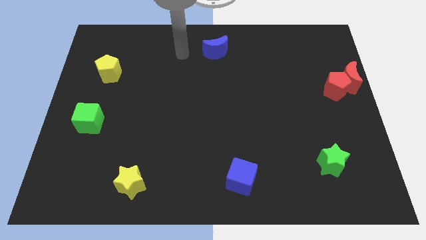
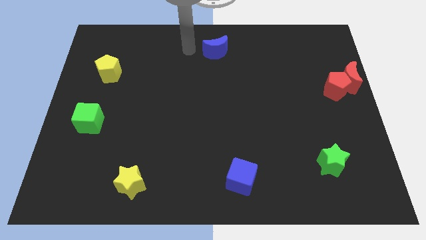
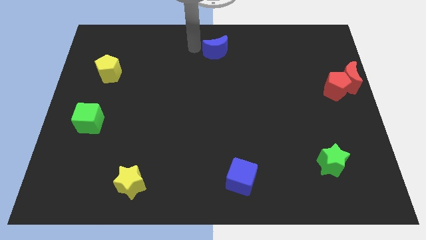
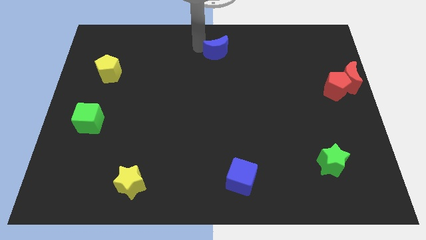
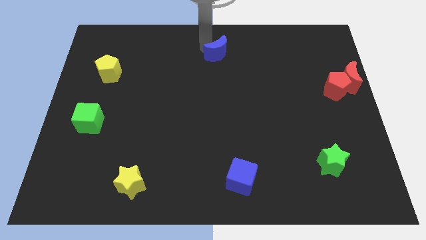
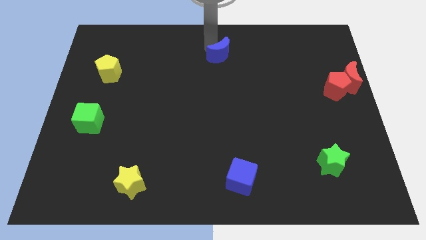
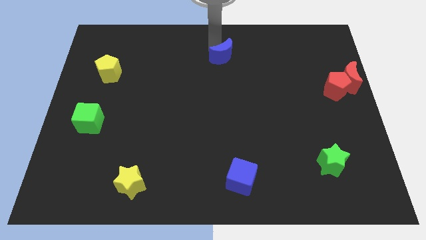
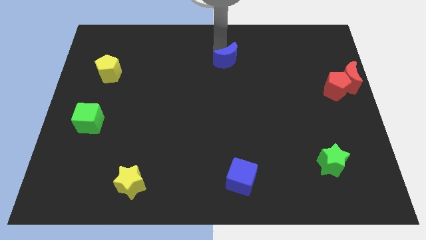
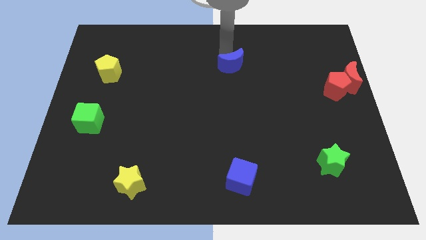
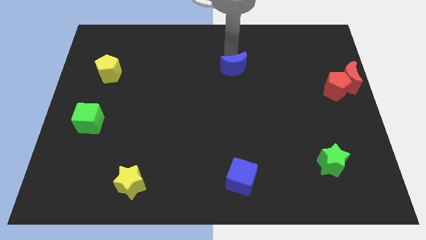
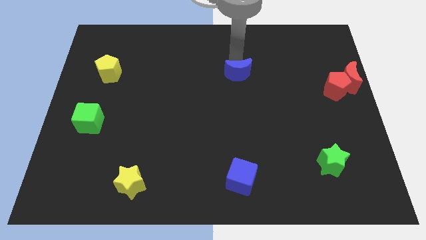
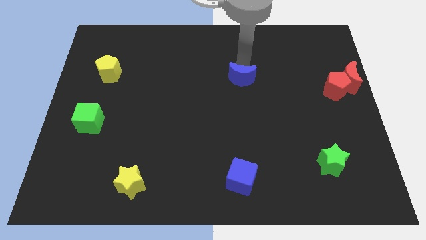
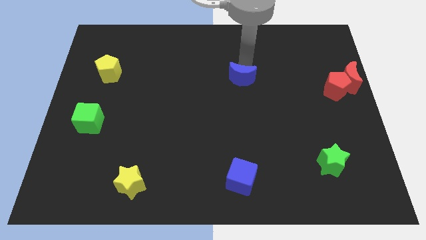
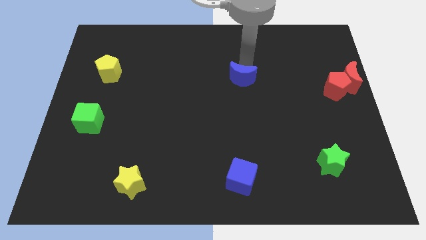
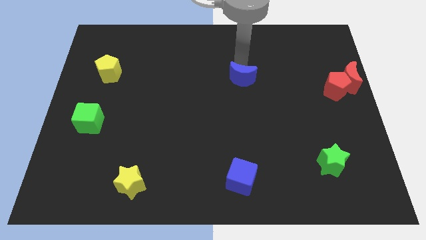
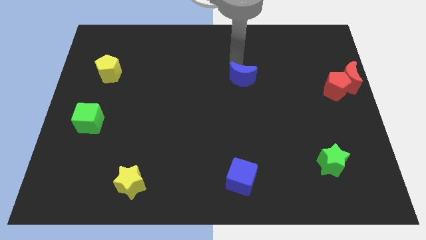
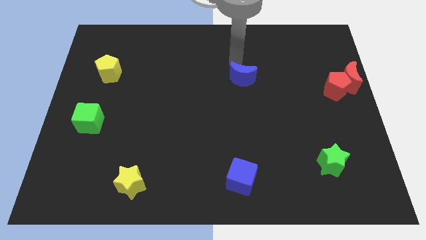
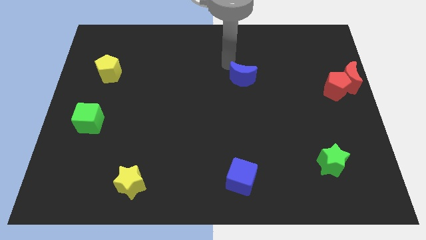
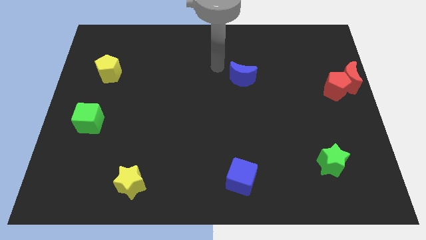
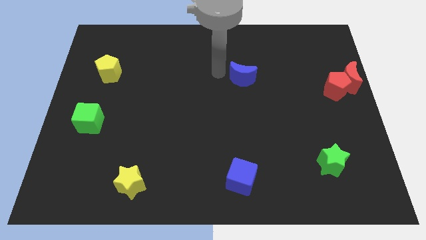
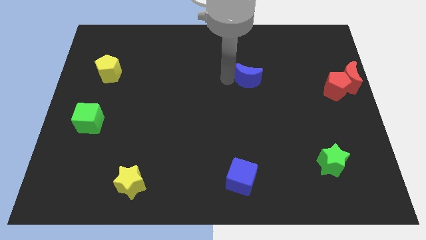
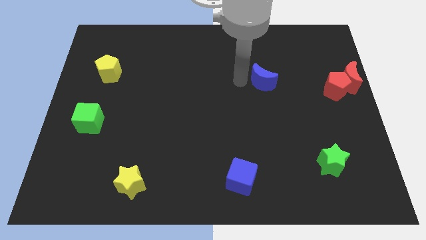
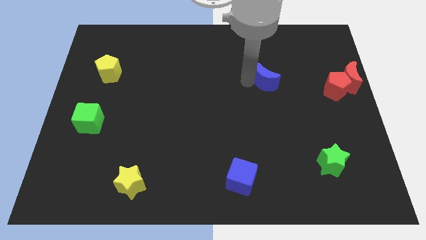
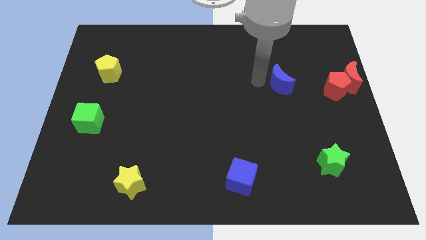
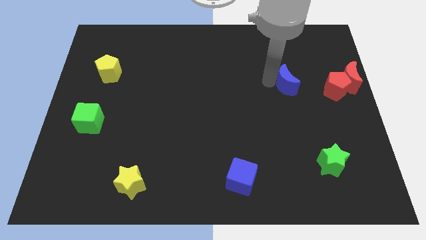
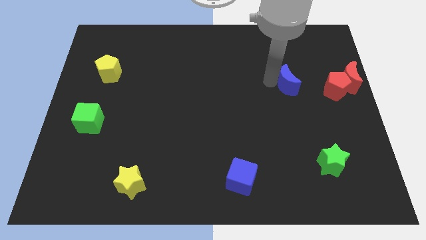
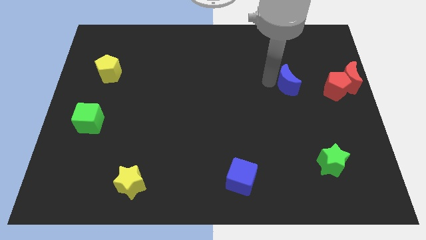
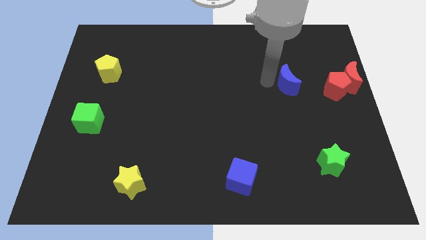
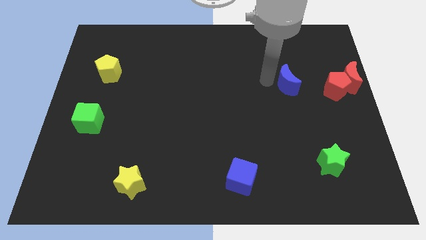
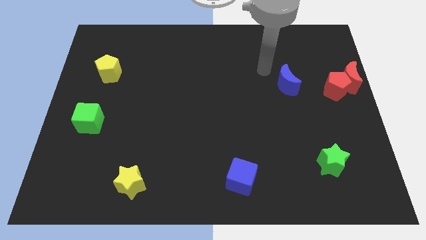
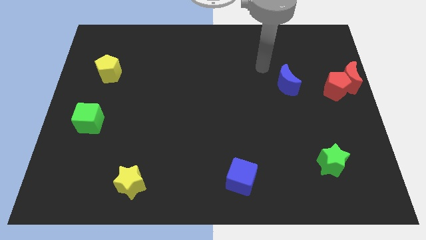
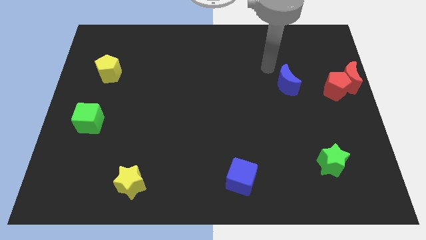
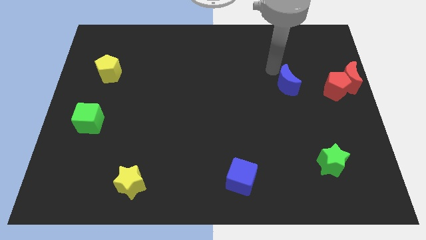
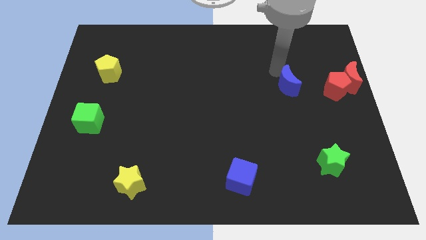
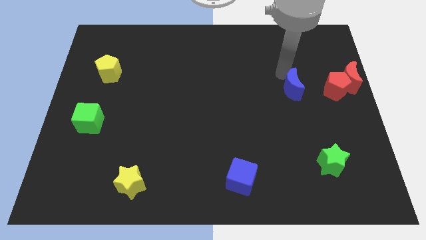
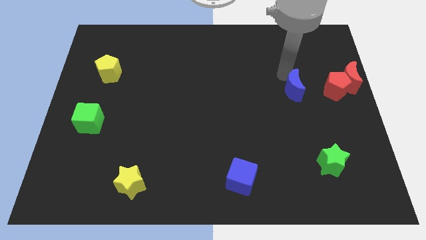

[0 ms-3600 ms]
move the blue moon left to the red pentagon

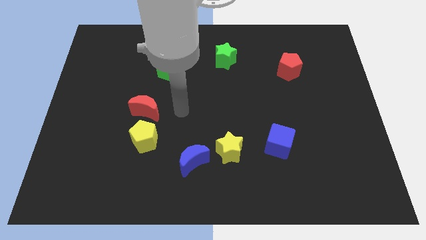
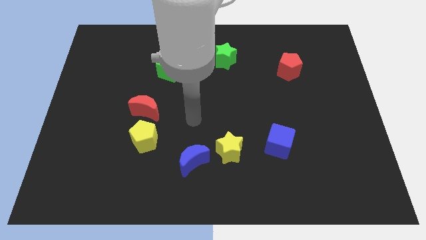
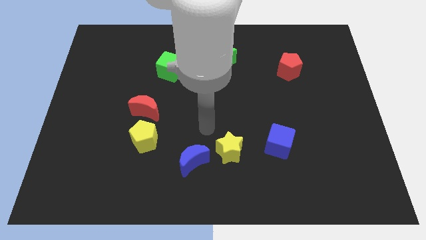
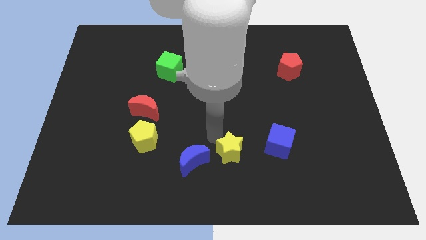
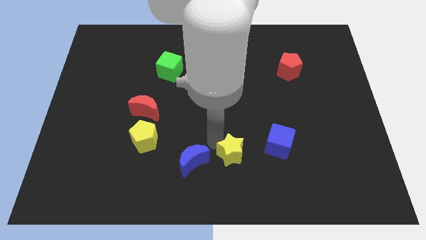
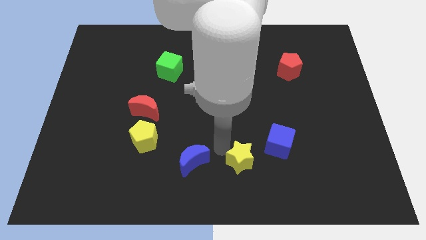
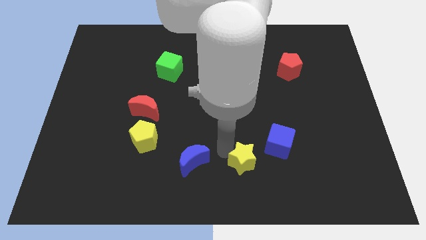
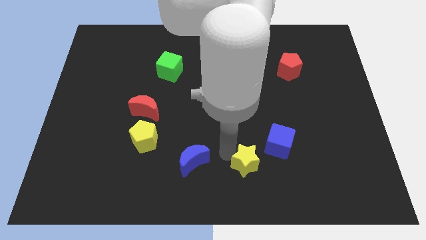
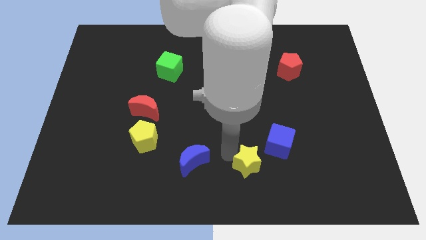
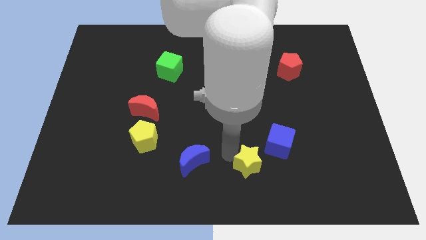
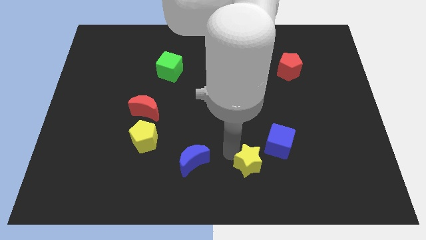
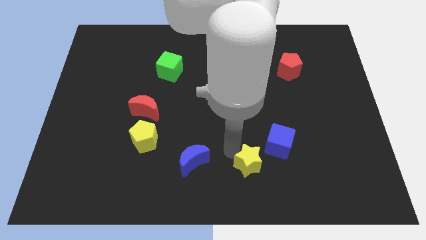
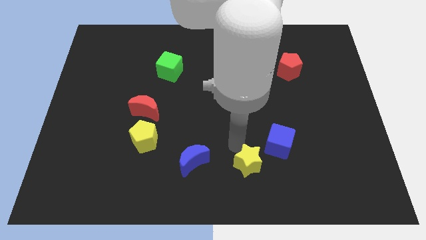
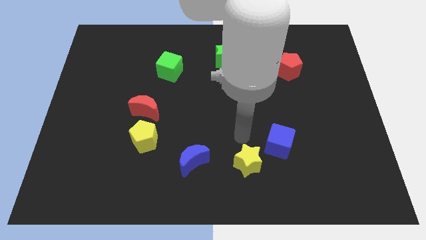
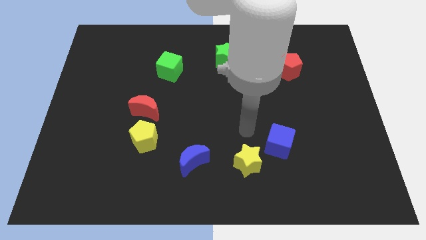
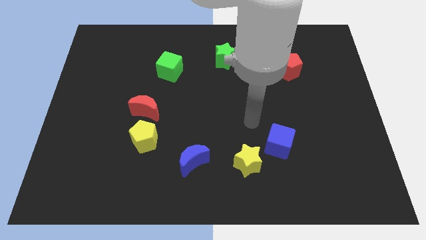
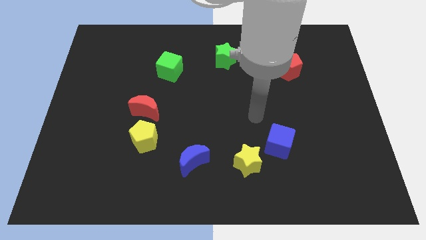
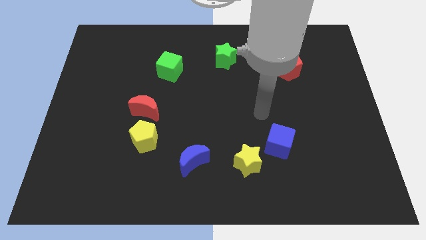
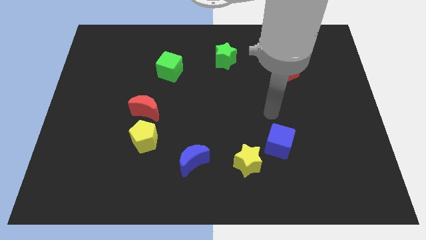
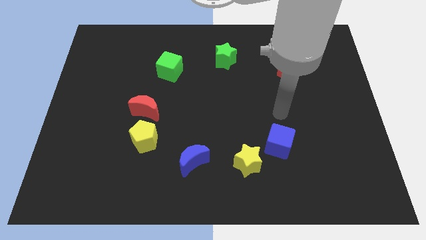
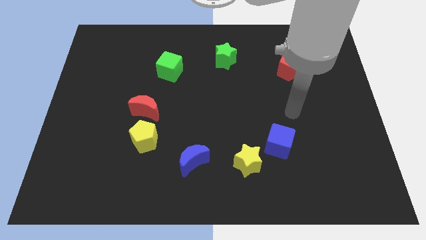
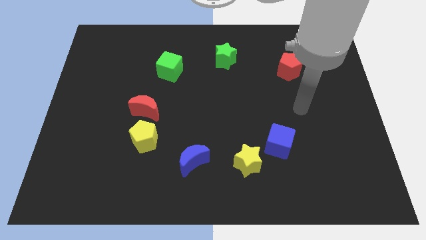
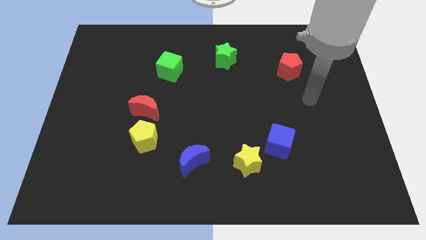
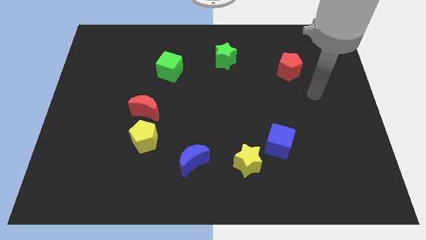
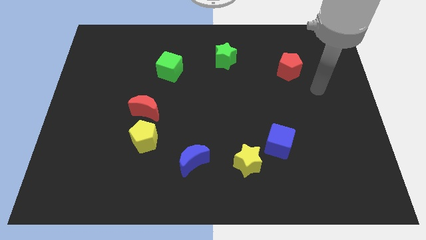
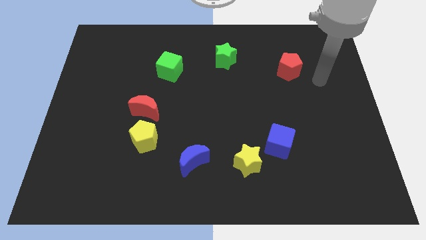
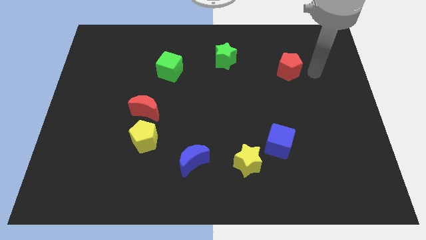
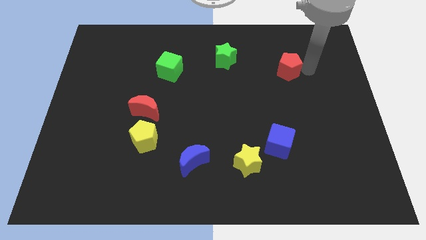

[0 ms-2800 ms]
move the yellow star down slightly

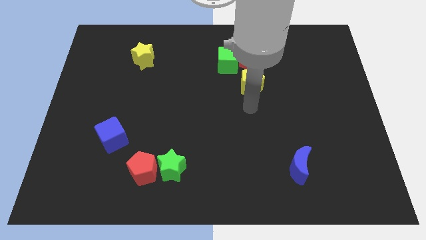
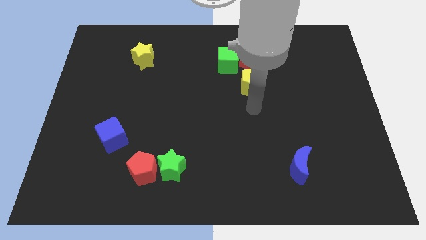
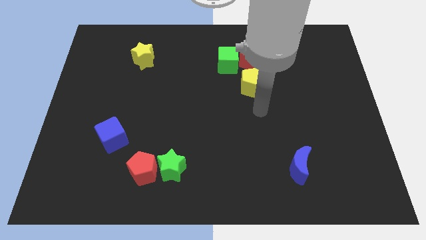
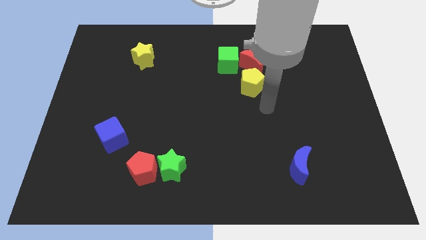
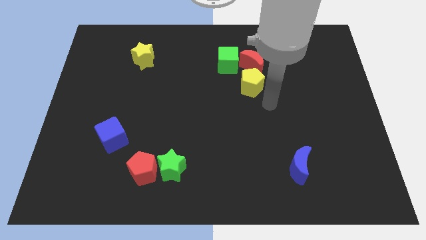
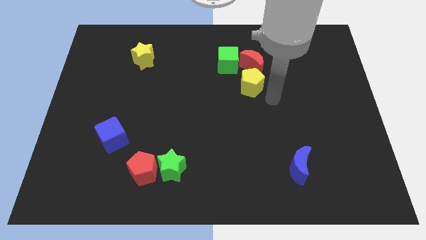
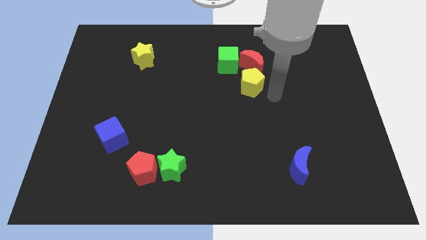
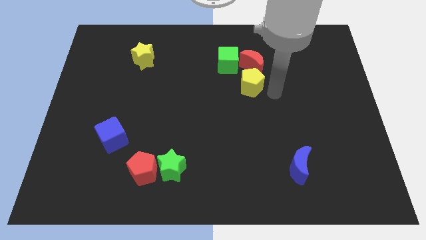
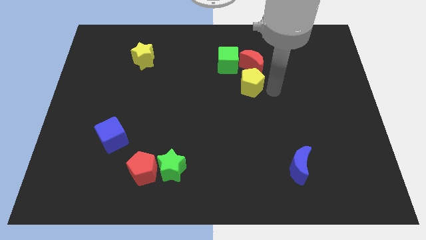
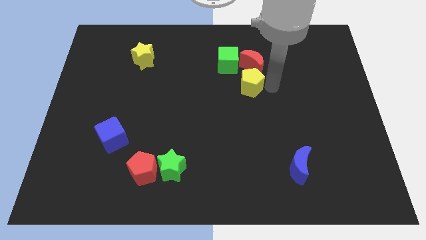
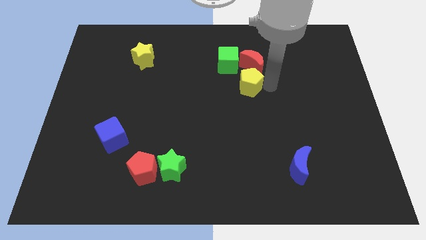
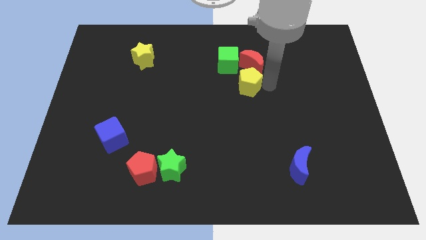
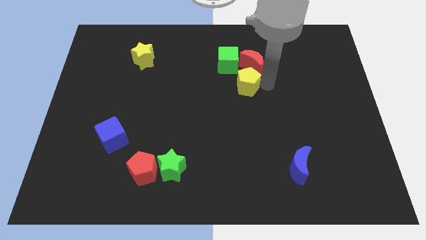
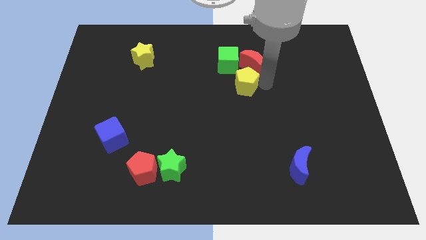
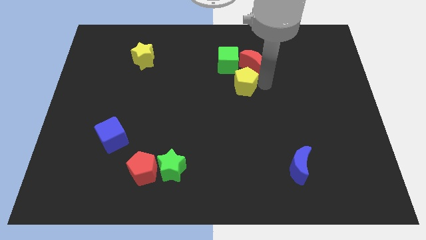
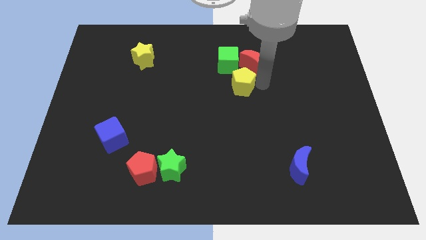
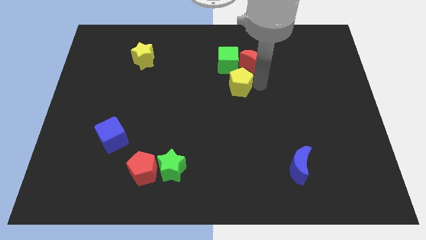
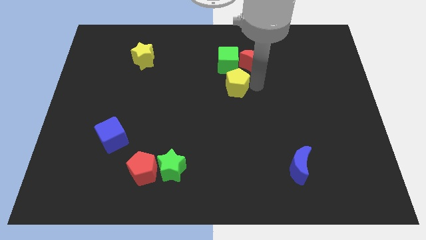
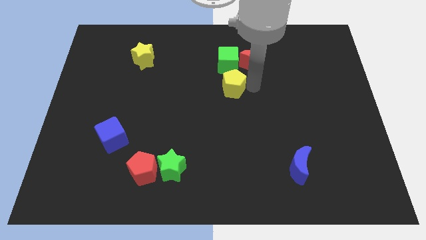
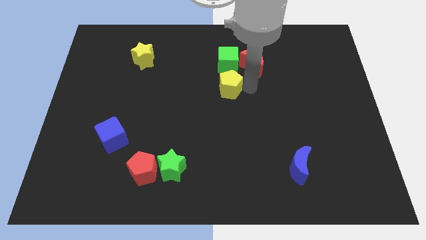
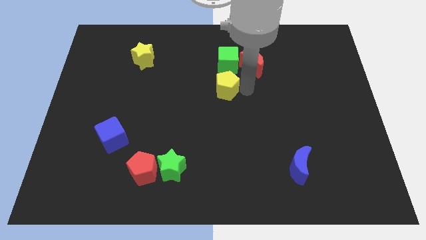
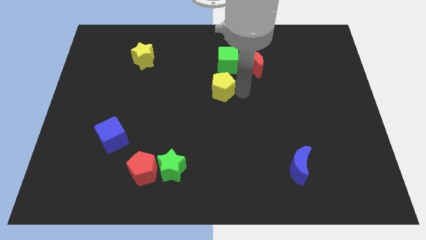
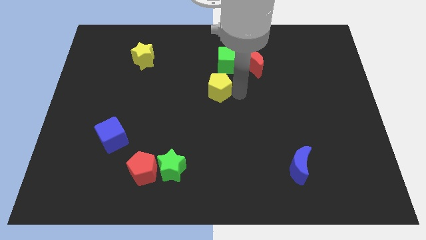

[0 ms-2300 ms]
place yellow pentagon below green cube

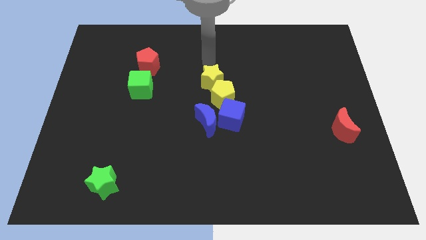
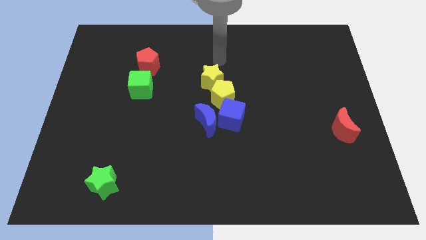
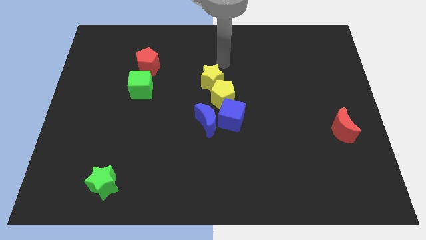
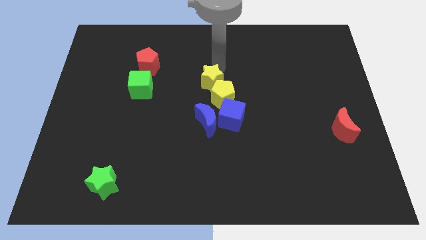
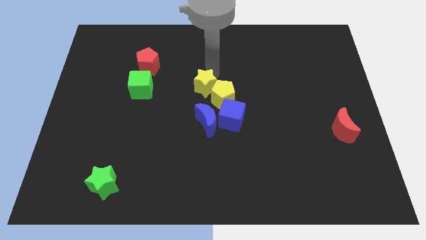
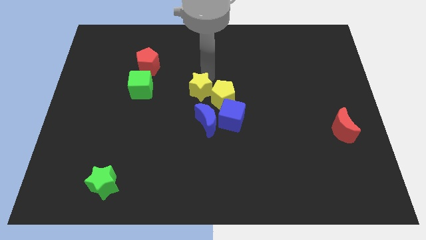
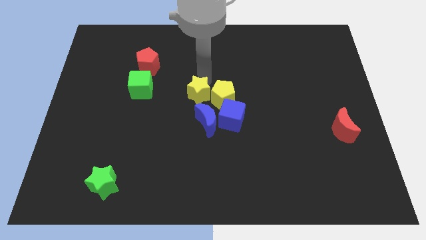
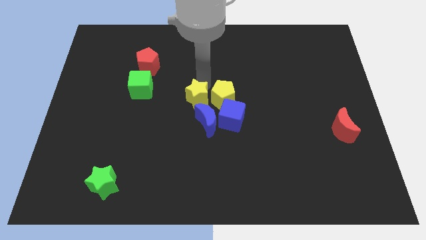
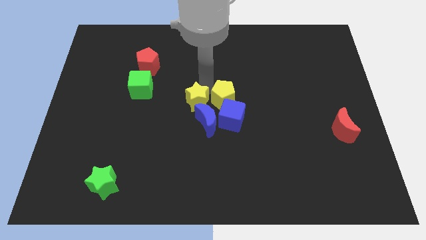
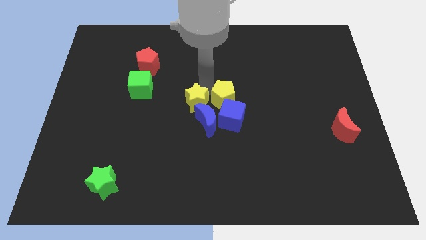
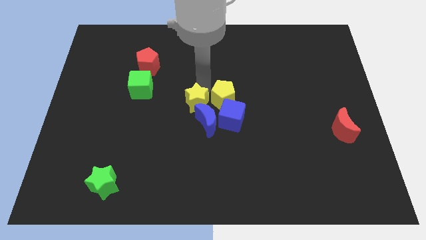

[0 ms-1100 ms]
place the yellow star to the left side of yellow pentagon
